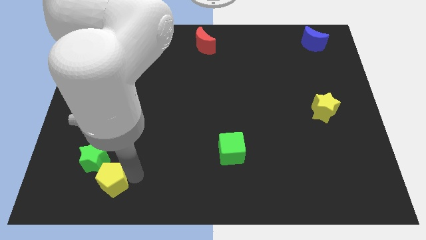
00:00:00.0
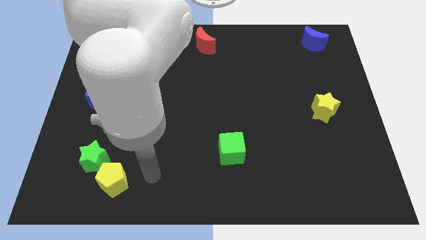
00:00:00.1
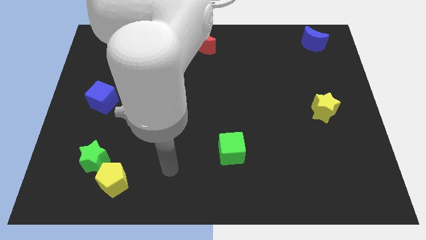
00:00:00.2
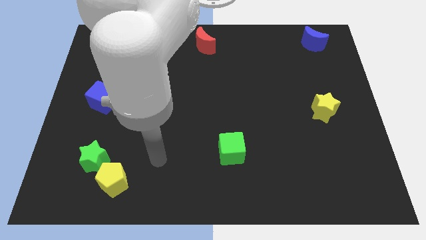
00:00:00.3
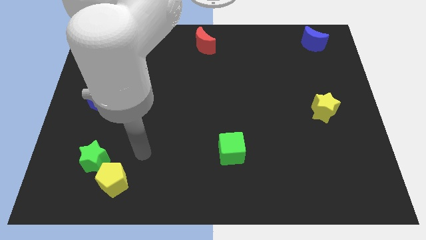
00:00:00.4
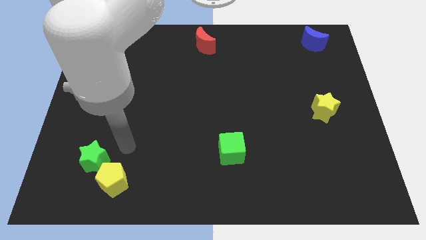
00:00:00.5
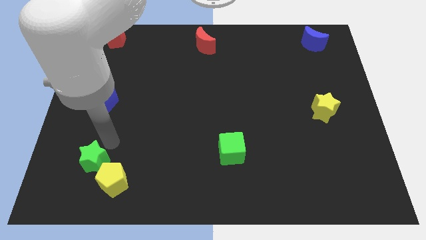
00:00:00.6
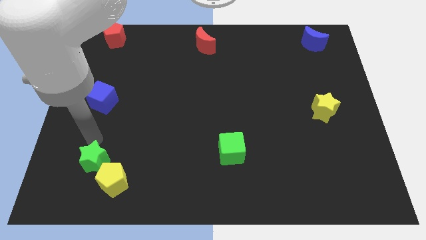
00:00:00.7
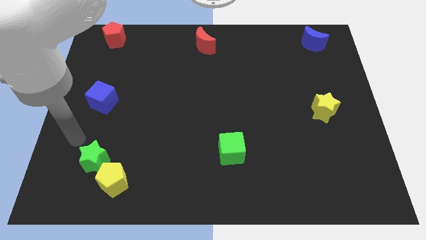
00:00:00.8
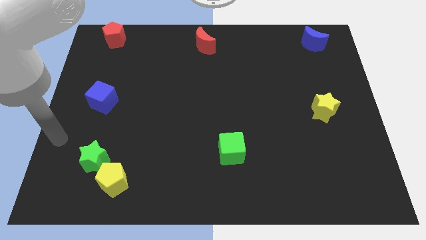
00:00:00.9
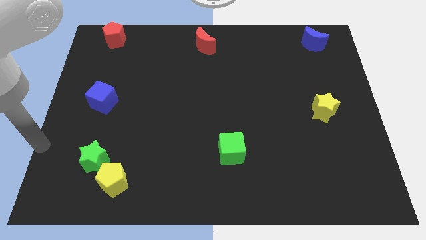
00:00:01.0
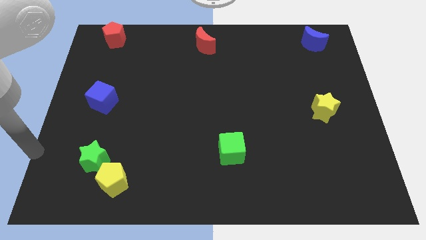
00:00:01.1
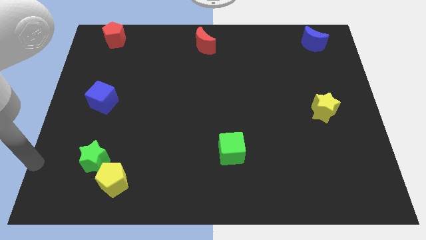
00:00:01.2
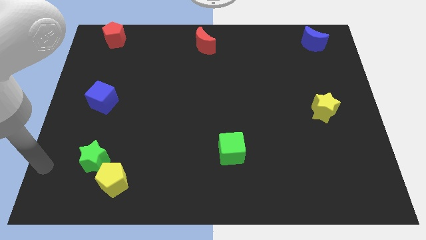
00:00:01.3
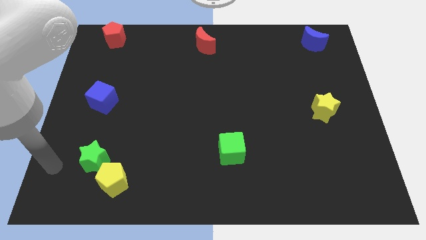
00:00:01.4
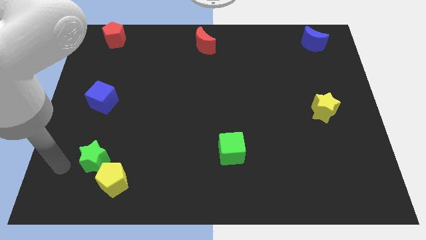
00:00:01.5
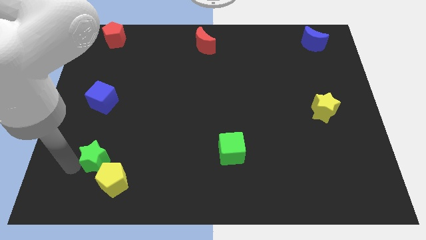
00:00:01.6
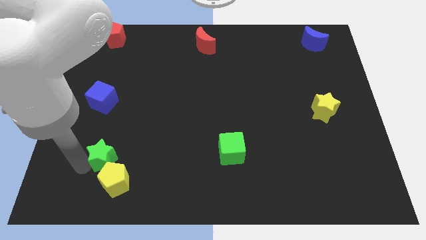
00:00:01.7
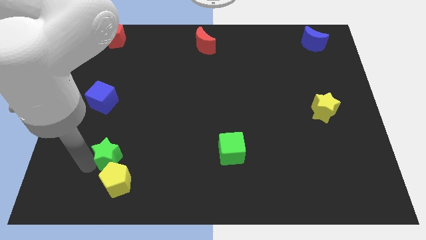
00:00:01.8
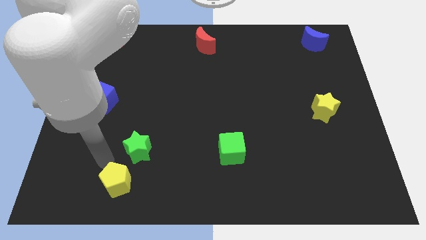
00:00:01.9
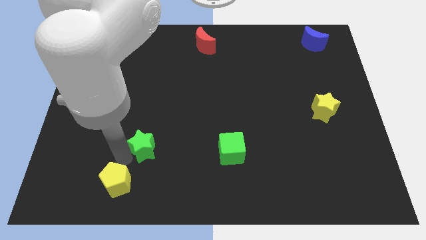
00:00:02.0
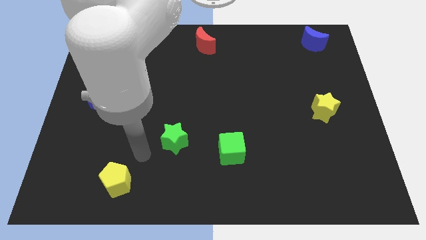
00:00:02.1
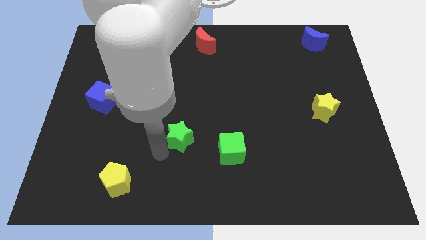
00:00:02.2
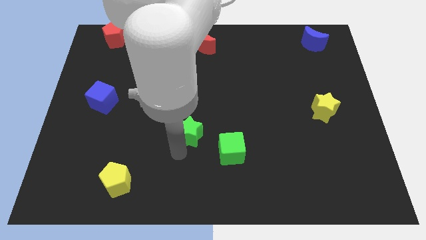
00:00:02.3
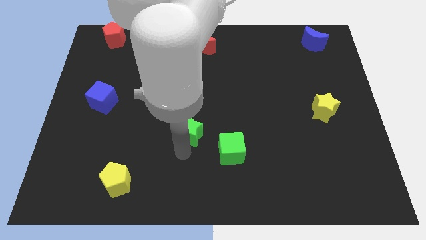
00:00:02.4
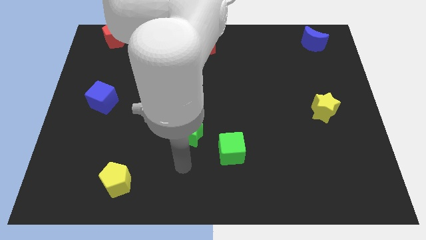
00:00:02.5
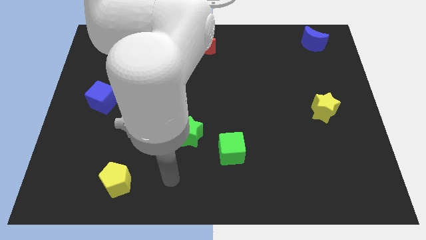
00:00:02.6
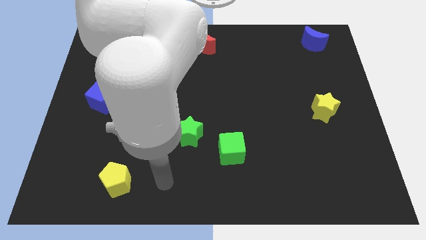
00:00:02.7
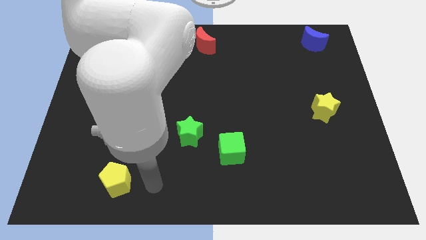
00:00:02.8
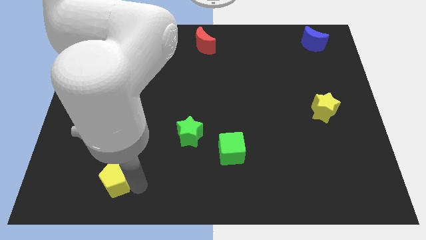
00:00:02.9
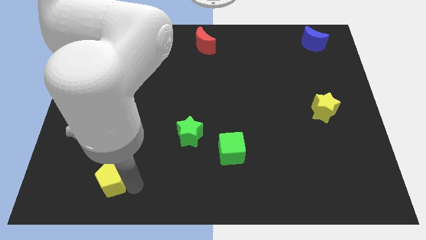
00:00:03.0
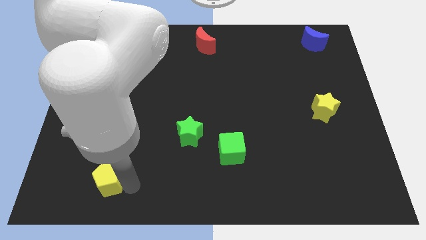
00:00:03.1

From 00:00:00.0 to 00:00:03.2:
move green star near to green cube

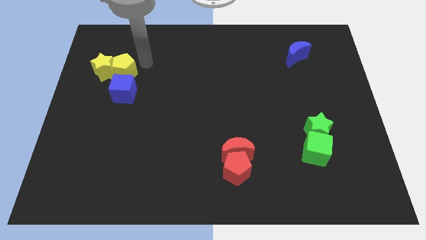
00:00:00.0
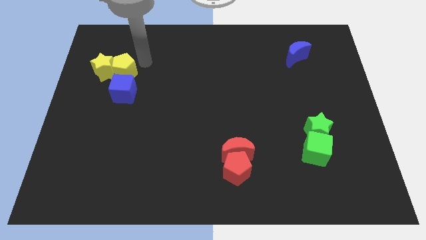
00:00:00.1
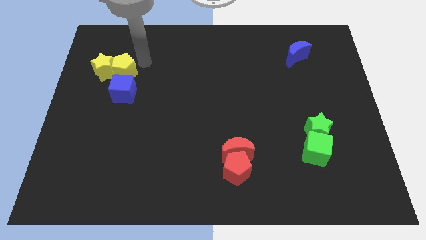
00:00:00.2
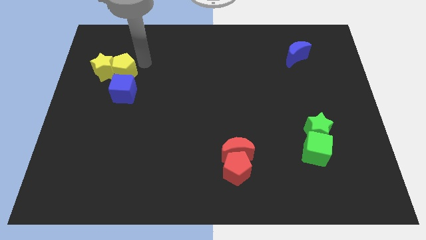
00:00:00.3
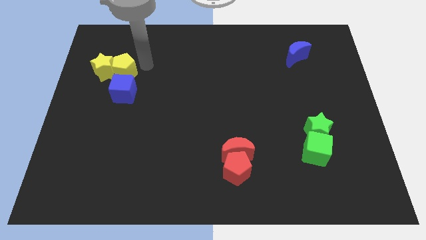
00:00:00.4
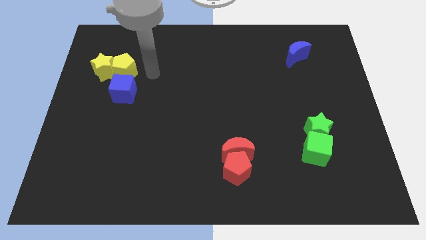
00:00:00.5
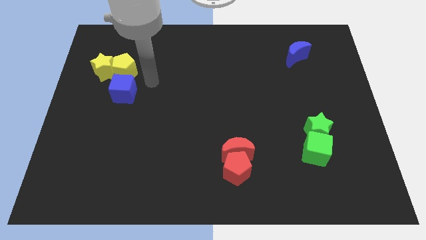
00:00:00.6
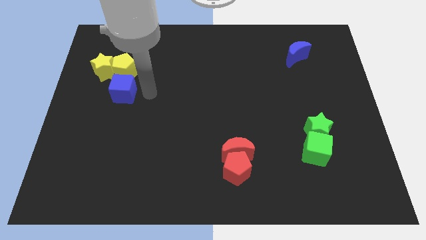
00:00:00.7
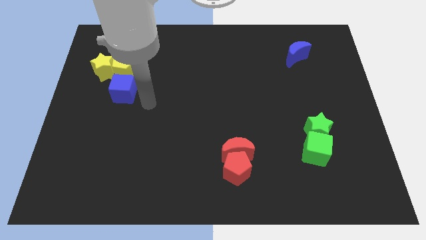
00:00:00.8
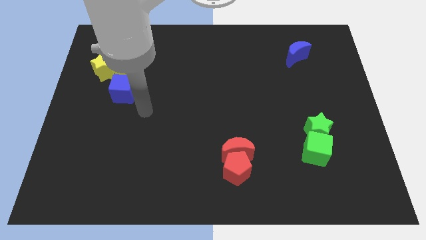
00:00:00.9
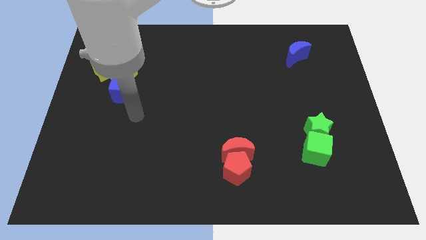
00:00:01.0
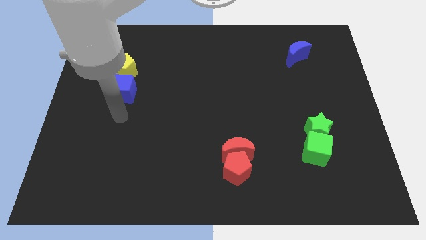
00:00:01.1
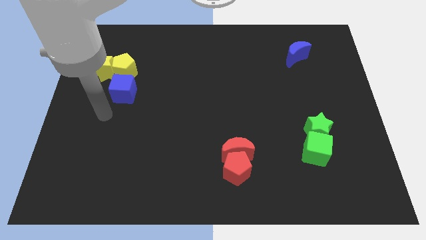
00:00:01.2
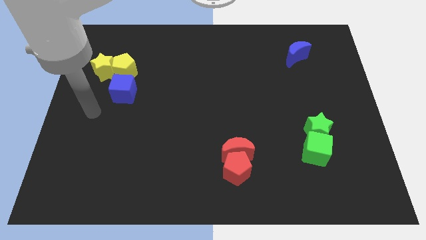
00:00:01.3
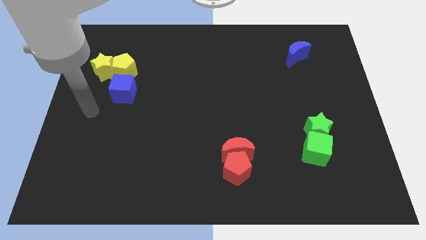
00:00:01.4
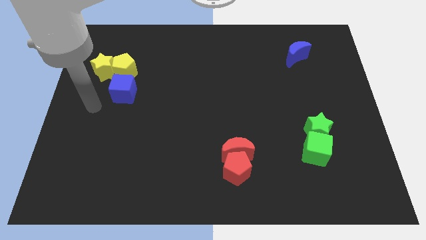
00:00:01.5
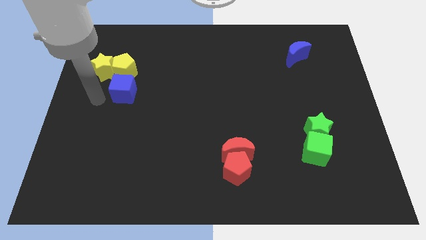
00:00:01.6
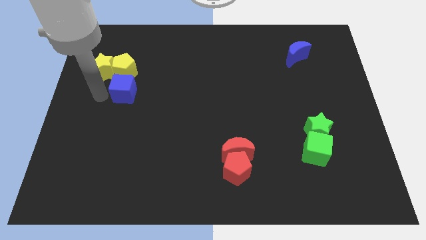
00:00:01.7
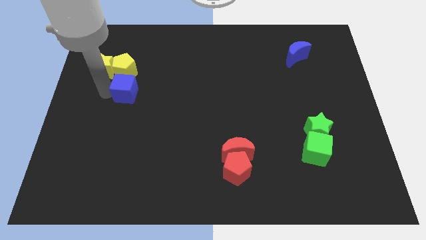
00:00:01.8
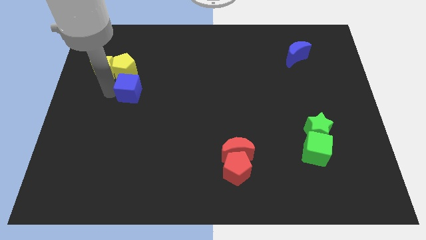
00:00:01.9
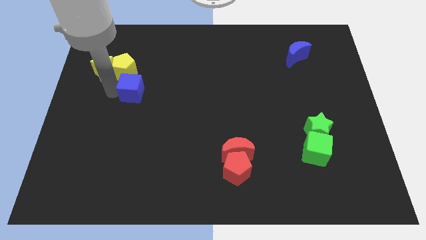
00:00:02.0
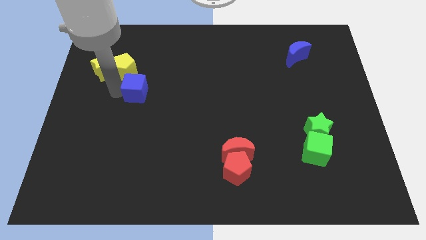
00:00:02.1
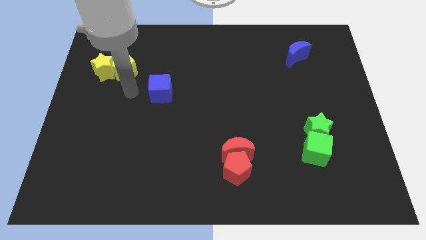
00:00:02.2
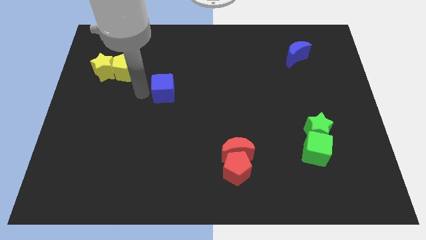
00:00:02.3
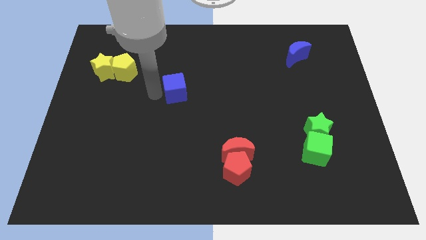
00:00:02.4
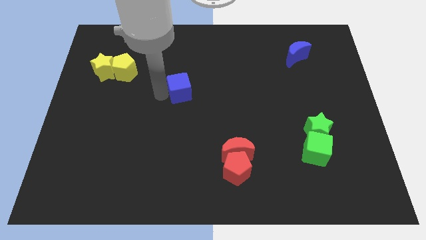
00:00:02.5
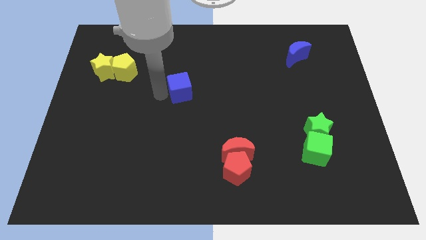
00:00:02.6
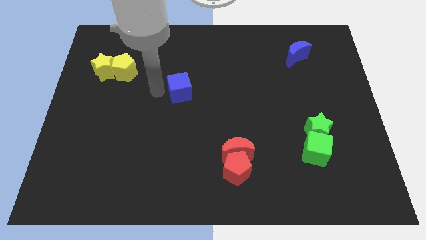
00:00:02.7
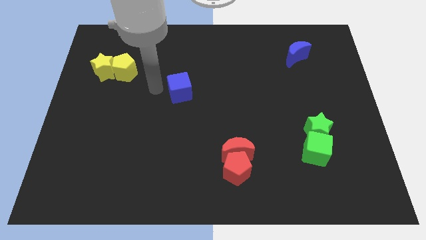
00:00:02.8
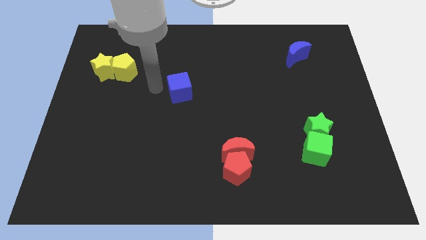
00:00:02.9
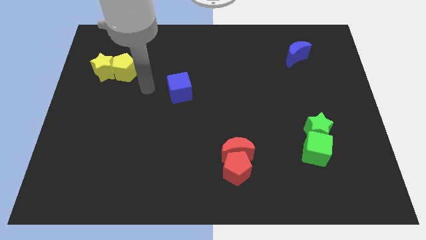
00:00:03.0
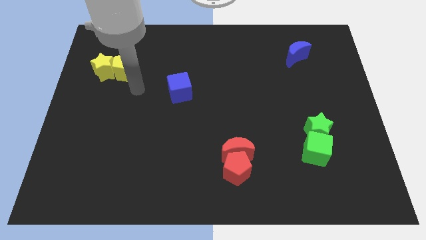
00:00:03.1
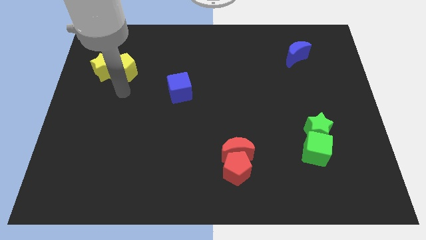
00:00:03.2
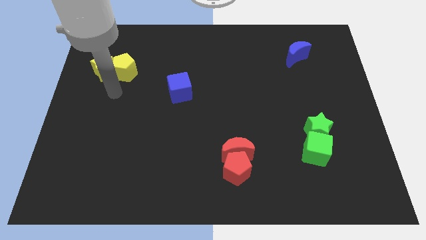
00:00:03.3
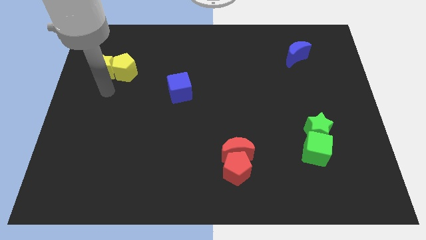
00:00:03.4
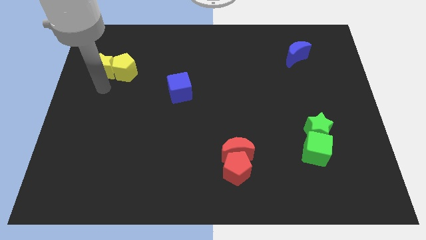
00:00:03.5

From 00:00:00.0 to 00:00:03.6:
separate the blue cube from yellow pentagon

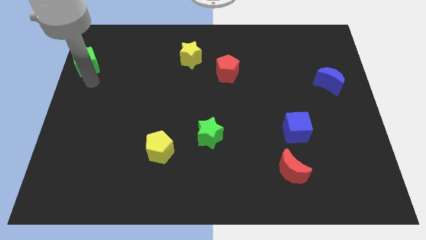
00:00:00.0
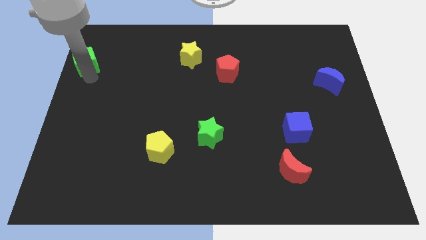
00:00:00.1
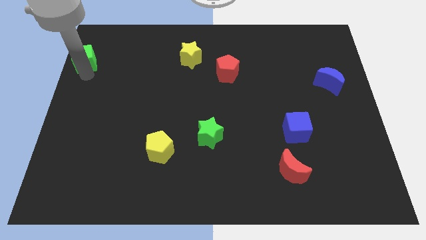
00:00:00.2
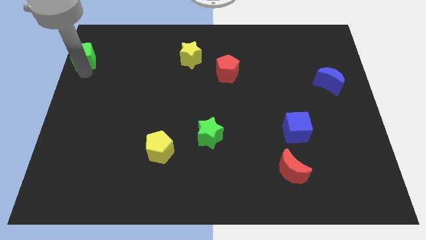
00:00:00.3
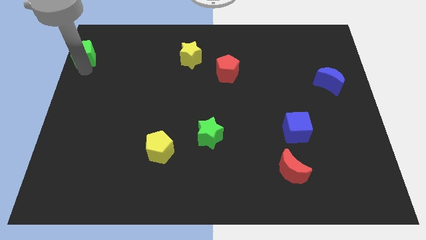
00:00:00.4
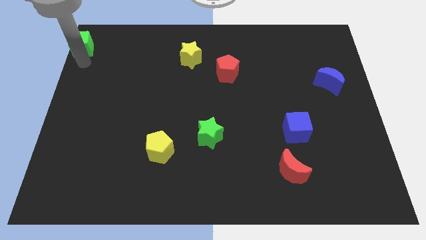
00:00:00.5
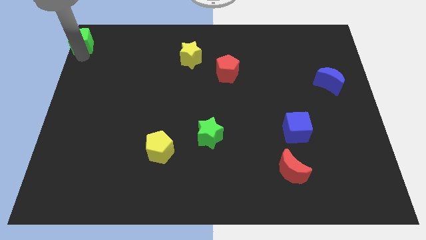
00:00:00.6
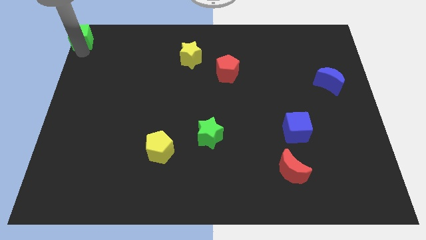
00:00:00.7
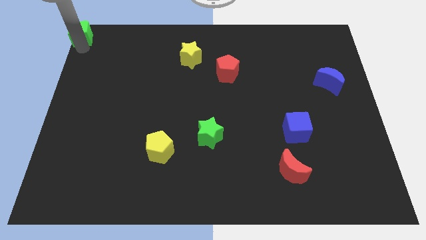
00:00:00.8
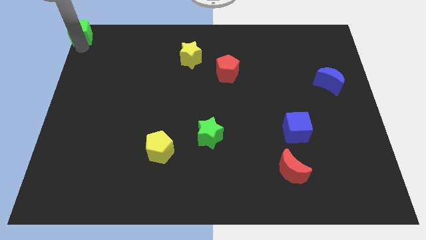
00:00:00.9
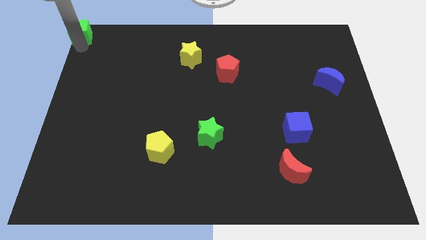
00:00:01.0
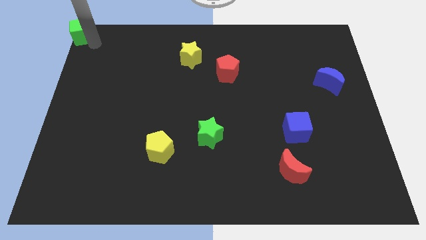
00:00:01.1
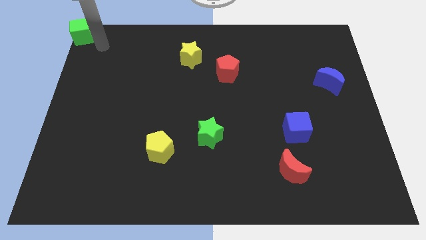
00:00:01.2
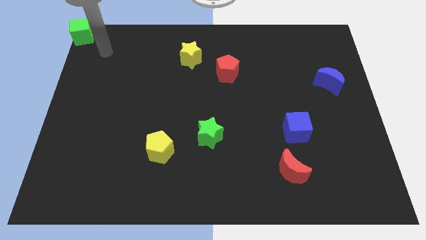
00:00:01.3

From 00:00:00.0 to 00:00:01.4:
move green cube to the top left corner of the board

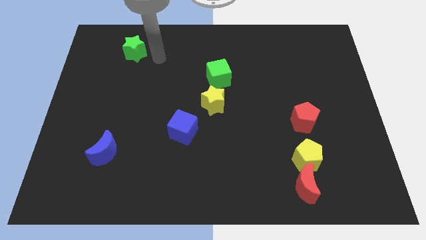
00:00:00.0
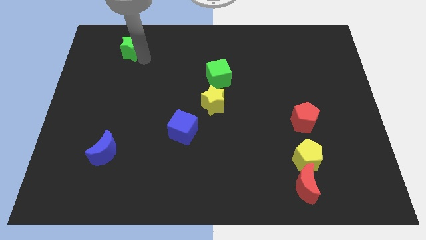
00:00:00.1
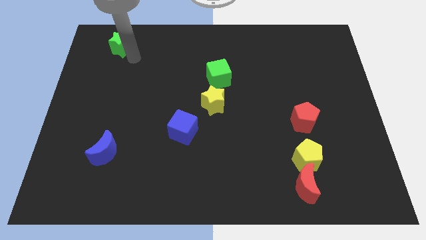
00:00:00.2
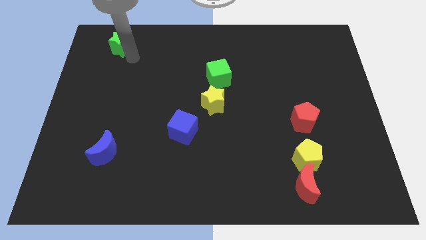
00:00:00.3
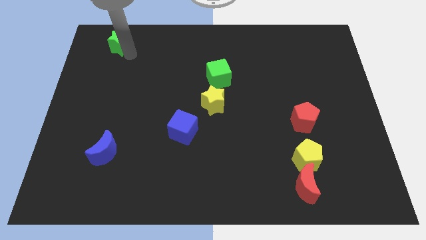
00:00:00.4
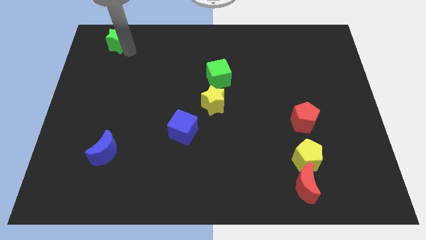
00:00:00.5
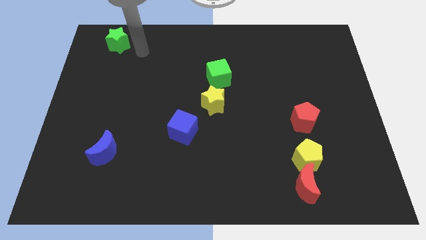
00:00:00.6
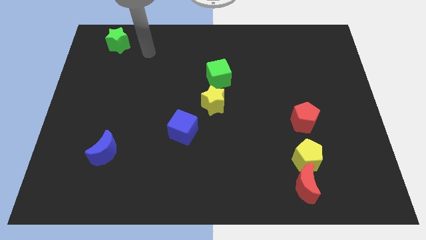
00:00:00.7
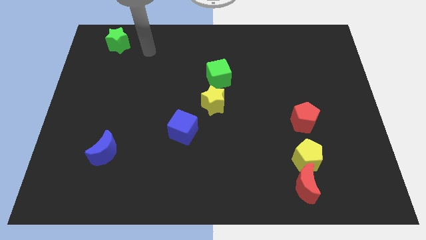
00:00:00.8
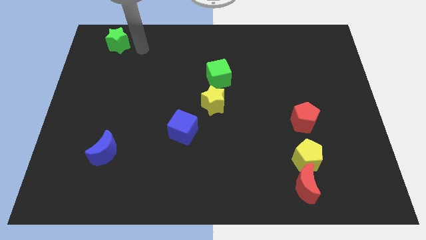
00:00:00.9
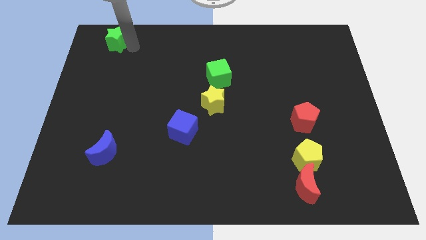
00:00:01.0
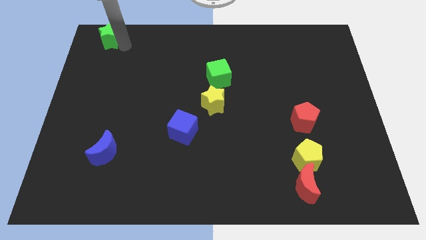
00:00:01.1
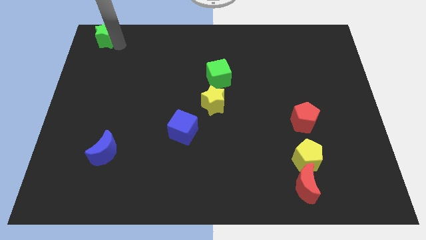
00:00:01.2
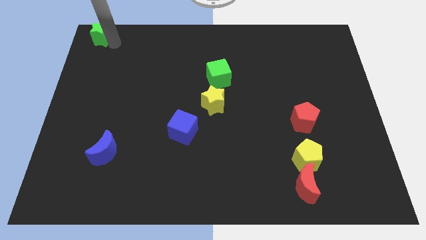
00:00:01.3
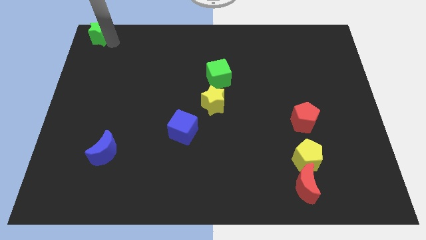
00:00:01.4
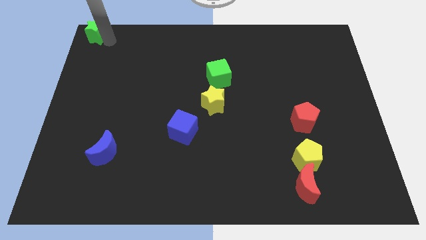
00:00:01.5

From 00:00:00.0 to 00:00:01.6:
move the green star to the top left of the board
